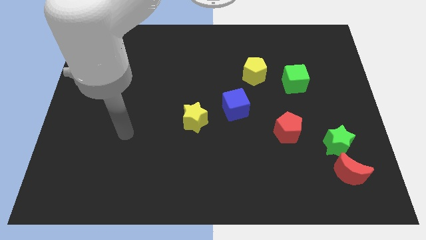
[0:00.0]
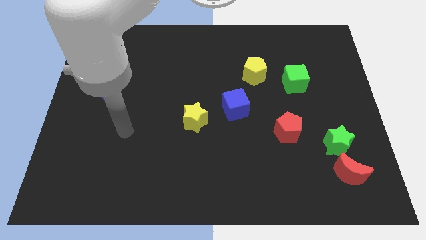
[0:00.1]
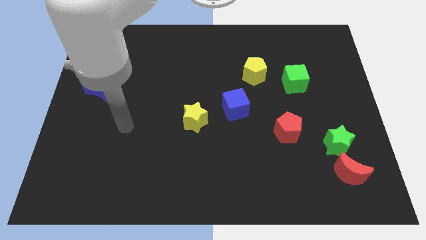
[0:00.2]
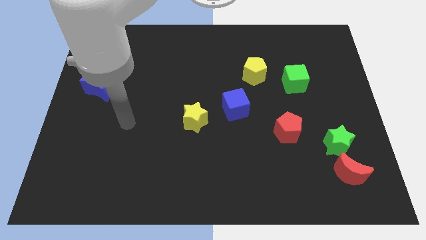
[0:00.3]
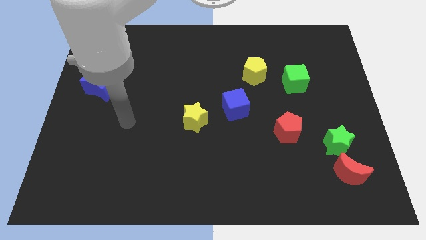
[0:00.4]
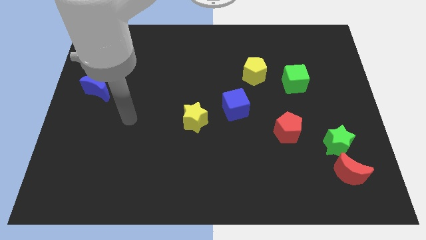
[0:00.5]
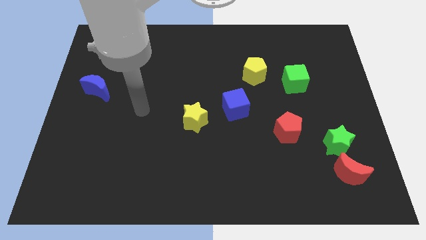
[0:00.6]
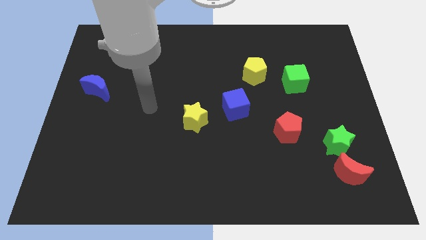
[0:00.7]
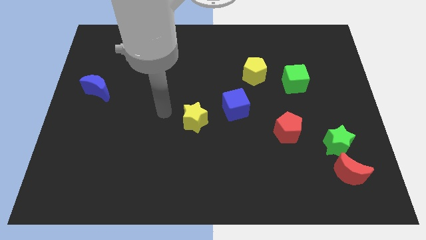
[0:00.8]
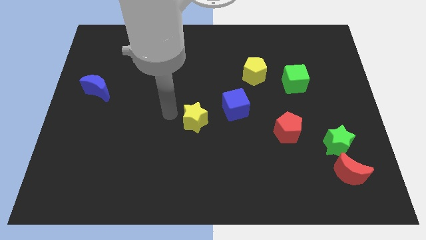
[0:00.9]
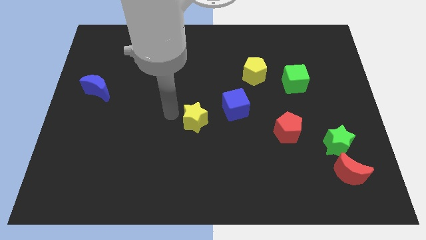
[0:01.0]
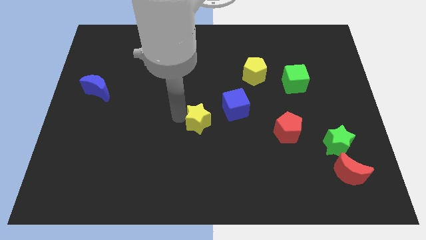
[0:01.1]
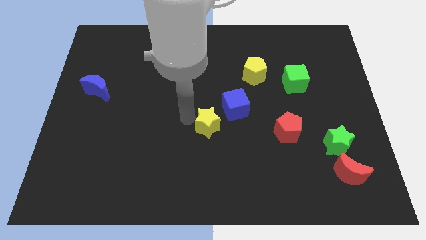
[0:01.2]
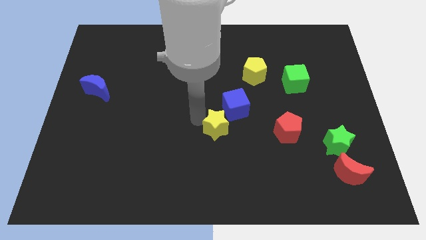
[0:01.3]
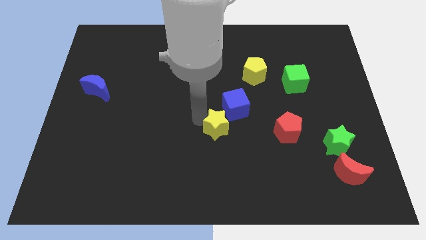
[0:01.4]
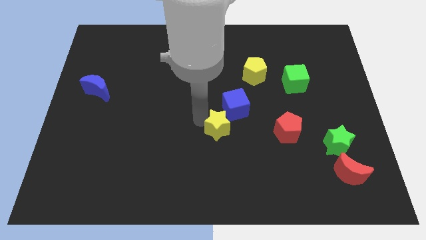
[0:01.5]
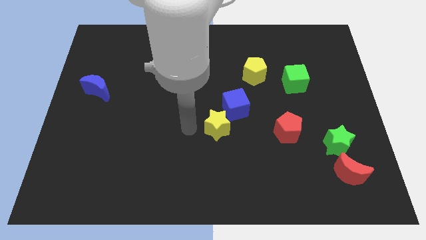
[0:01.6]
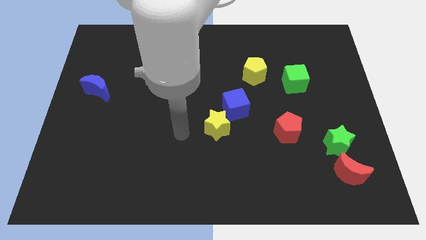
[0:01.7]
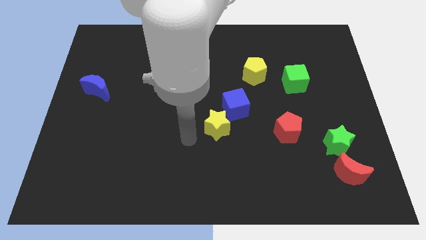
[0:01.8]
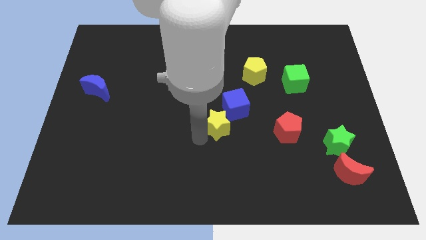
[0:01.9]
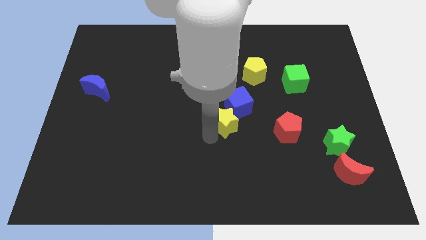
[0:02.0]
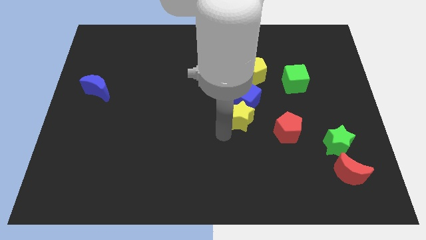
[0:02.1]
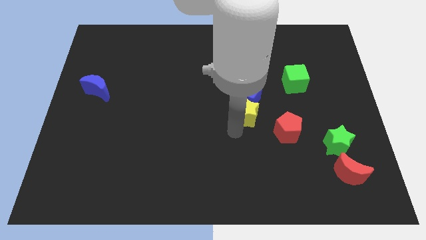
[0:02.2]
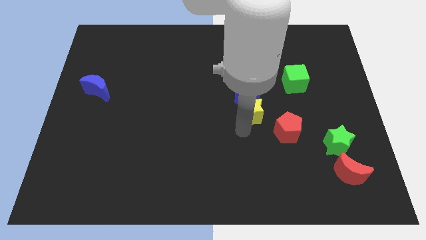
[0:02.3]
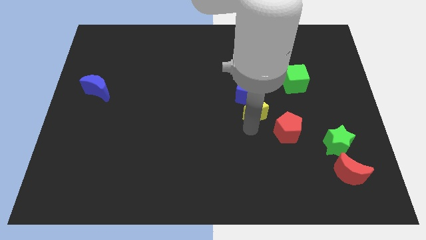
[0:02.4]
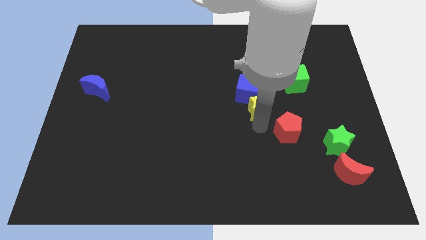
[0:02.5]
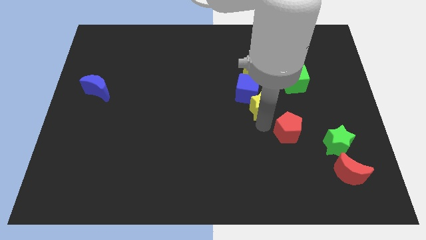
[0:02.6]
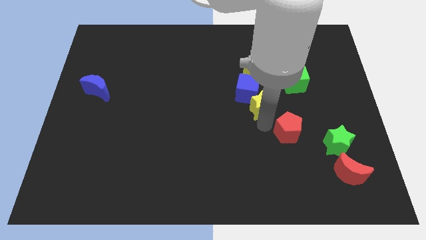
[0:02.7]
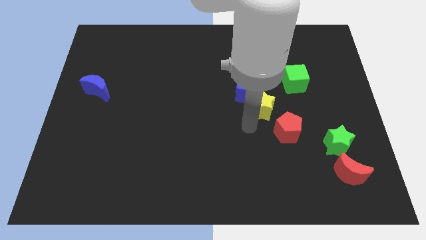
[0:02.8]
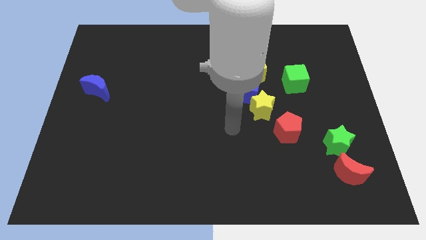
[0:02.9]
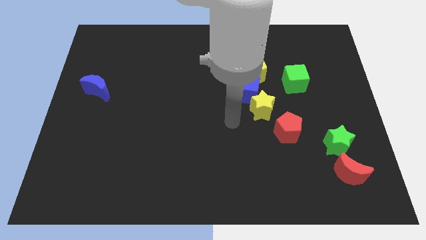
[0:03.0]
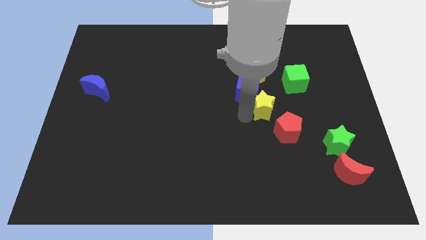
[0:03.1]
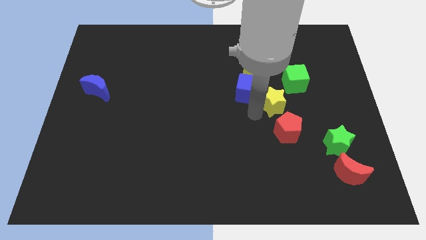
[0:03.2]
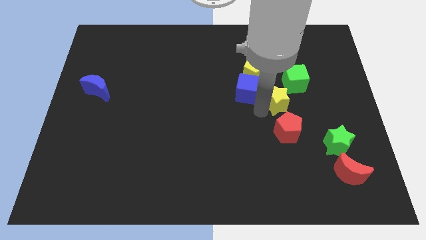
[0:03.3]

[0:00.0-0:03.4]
move the yellow star and the blue cube towards top

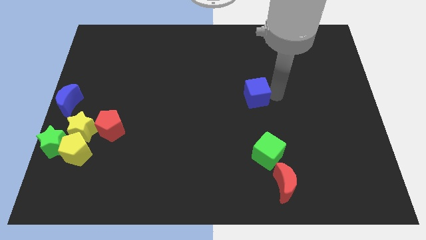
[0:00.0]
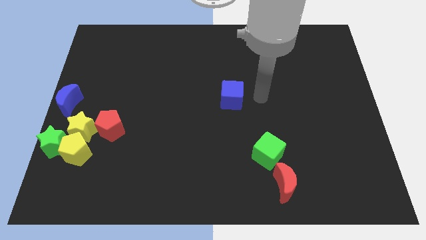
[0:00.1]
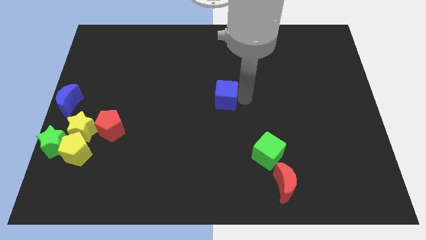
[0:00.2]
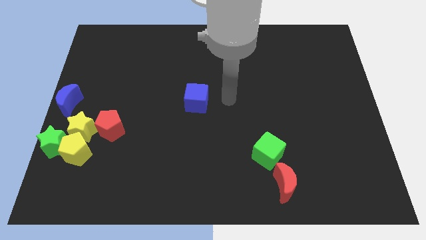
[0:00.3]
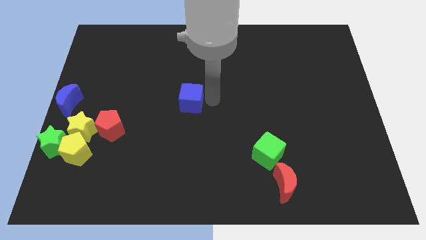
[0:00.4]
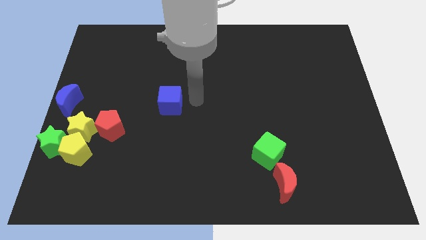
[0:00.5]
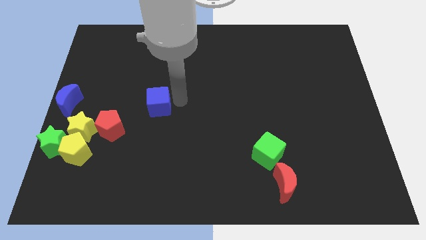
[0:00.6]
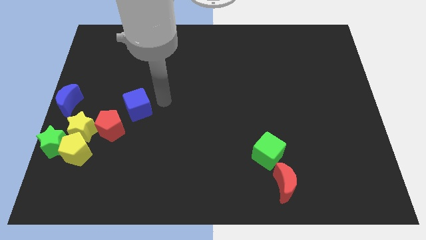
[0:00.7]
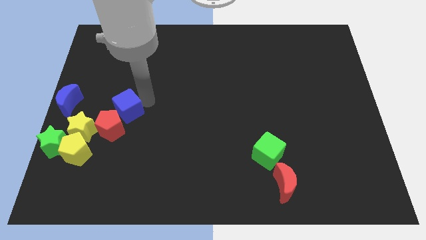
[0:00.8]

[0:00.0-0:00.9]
move the blue cube into red pentagon

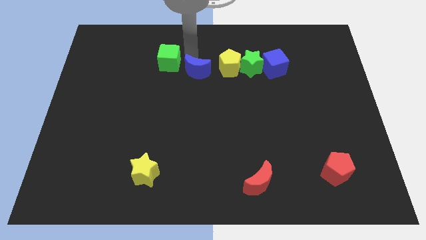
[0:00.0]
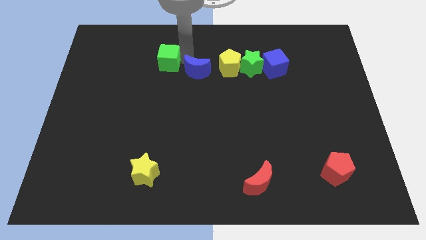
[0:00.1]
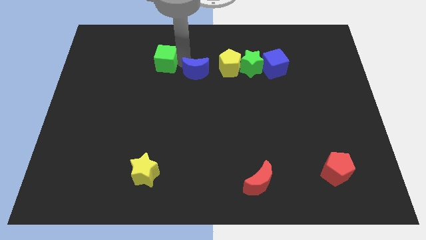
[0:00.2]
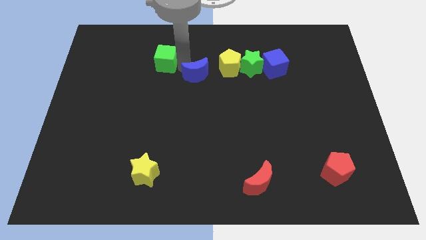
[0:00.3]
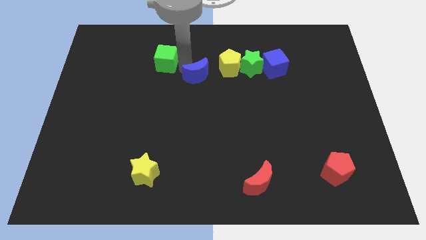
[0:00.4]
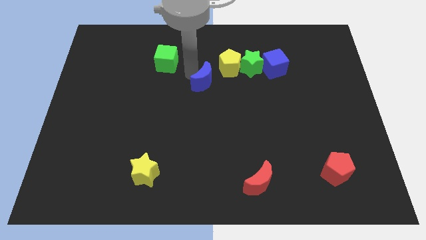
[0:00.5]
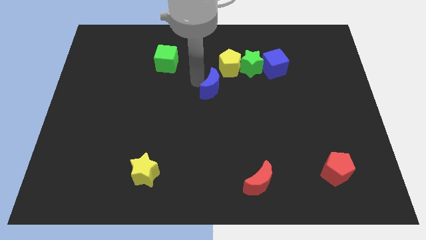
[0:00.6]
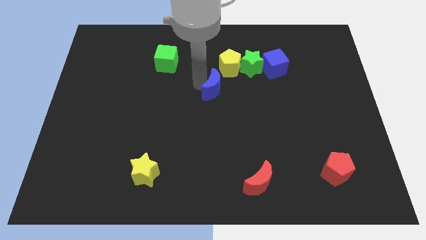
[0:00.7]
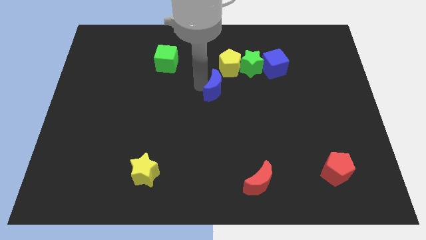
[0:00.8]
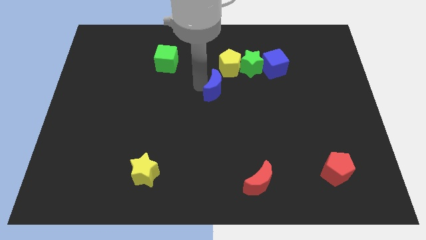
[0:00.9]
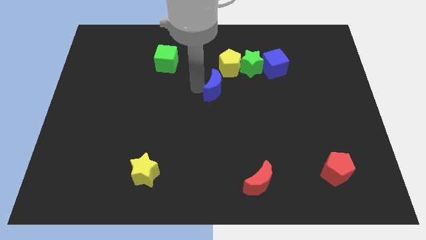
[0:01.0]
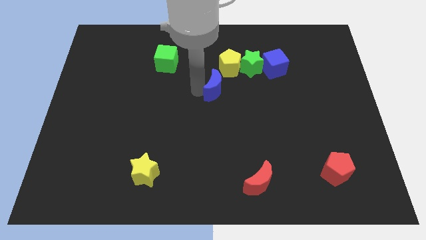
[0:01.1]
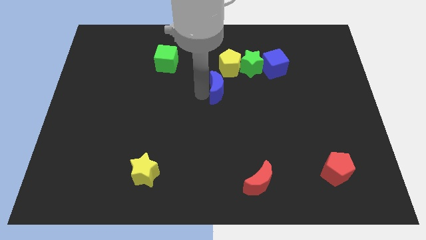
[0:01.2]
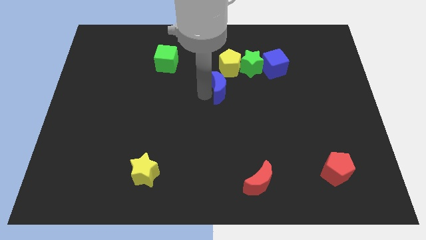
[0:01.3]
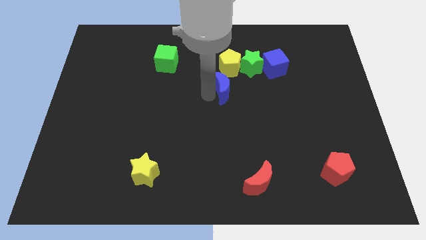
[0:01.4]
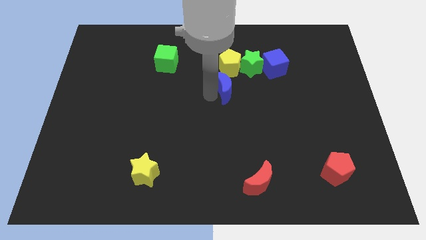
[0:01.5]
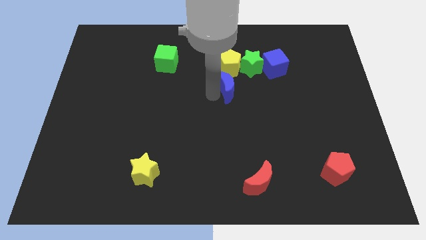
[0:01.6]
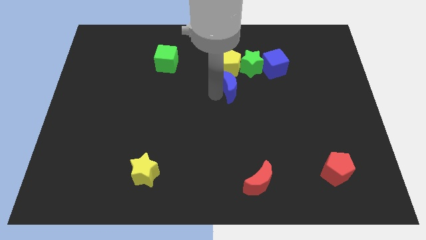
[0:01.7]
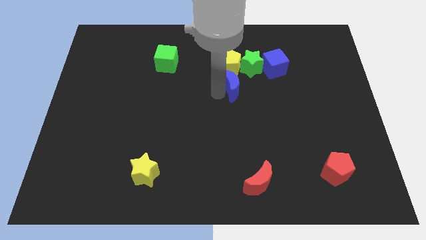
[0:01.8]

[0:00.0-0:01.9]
place the blue crescent below the yellow pentagon

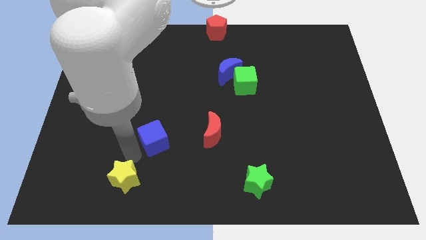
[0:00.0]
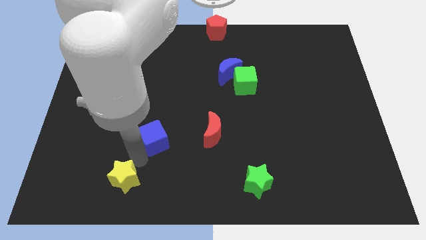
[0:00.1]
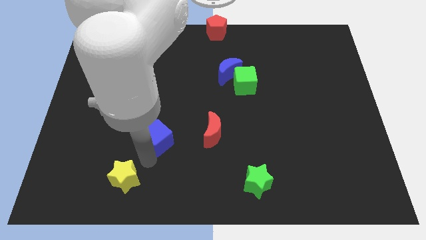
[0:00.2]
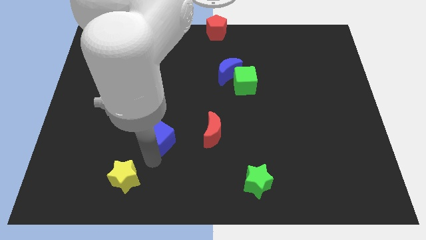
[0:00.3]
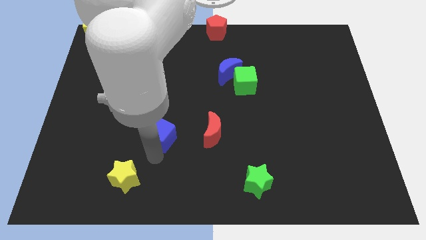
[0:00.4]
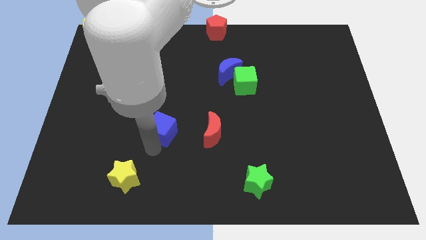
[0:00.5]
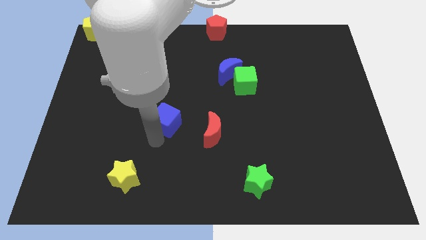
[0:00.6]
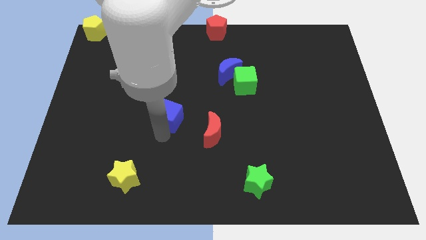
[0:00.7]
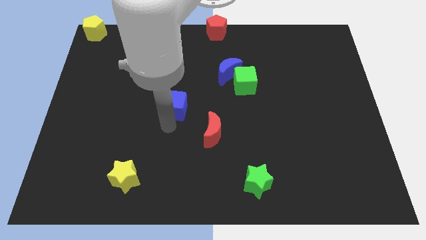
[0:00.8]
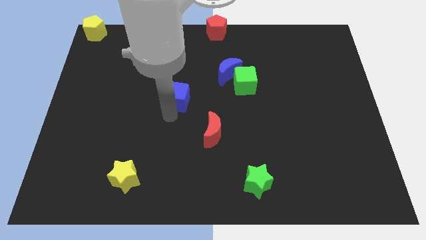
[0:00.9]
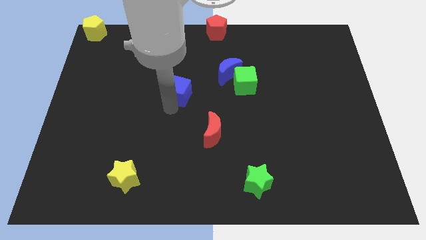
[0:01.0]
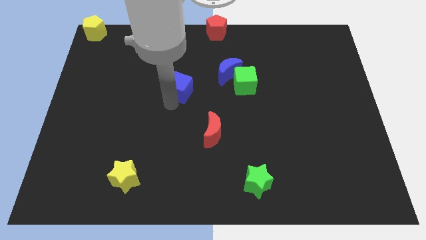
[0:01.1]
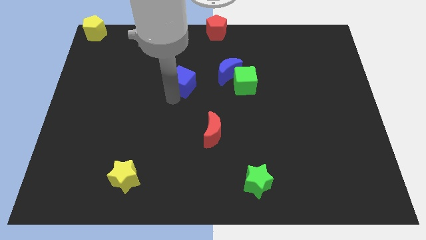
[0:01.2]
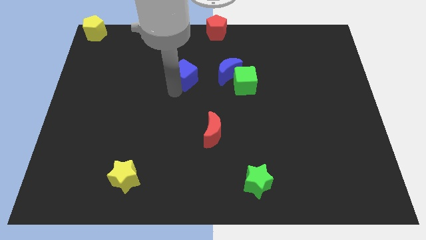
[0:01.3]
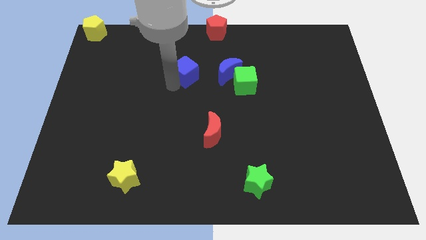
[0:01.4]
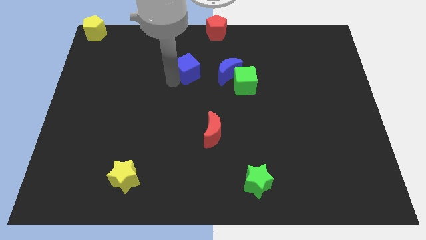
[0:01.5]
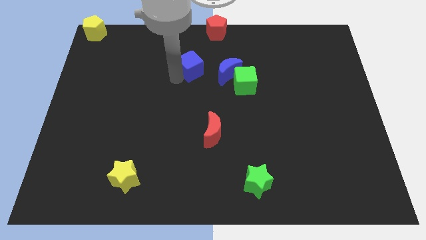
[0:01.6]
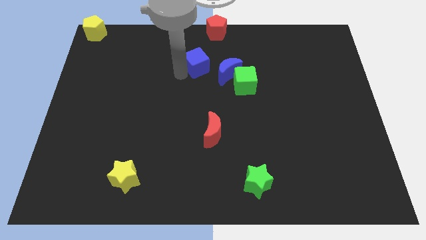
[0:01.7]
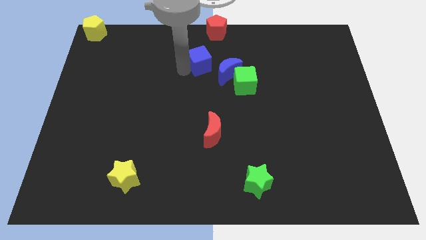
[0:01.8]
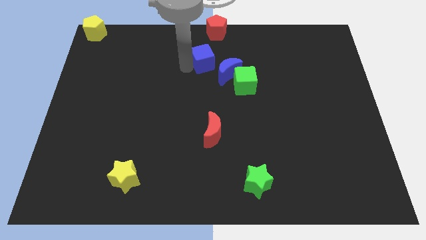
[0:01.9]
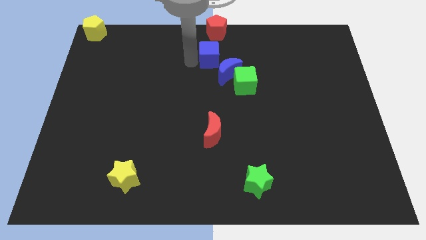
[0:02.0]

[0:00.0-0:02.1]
push blue cube above the red moon

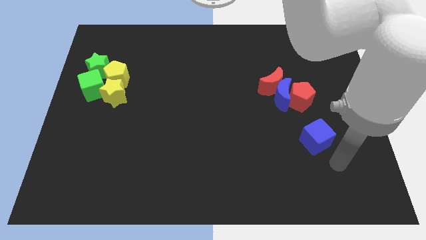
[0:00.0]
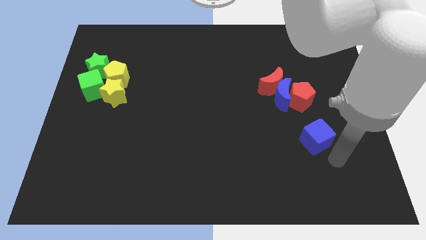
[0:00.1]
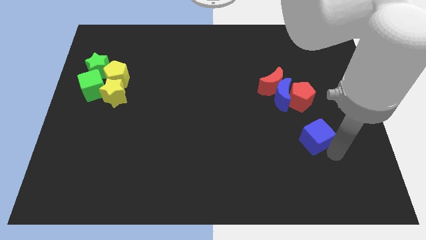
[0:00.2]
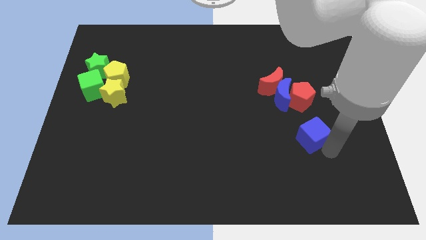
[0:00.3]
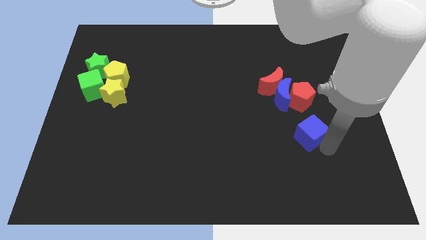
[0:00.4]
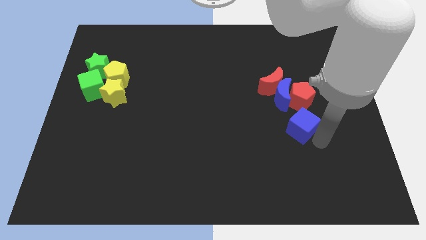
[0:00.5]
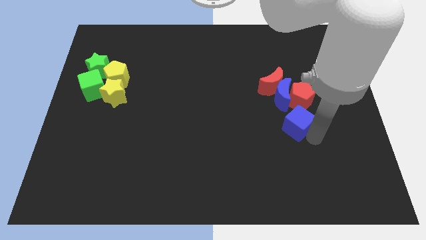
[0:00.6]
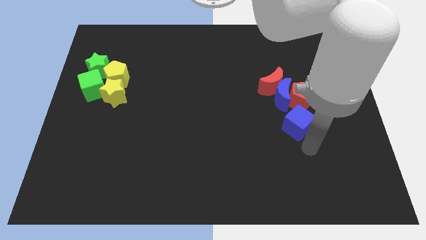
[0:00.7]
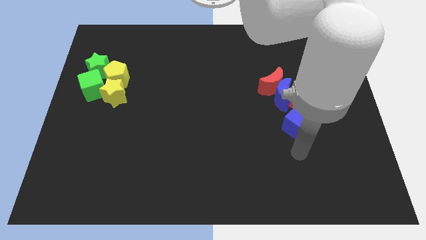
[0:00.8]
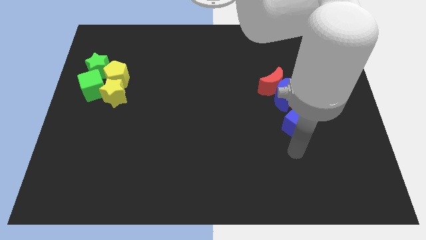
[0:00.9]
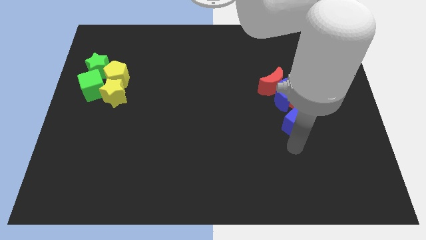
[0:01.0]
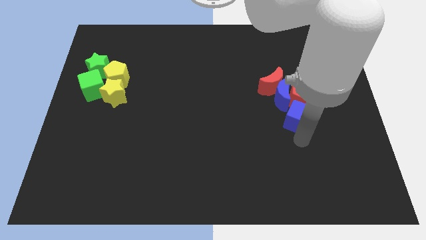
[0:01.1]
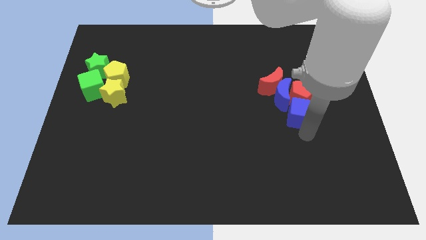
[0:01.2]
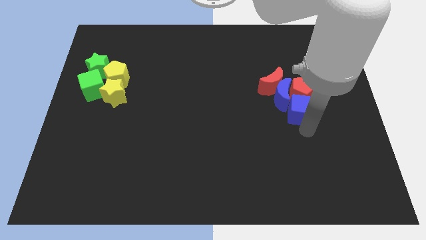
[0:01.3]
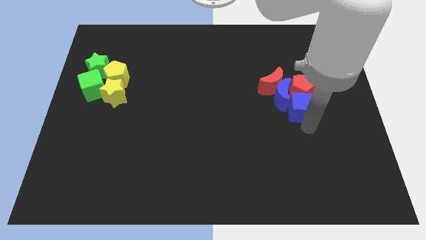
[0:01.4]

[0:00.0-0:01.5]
push the blue cube into the red pentagon
